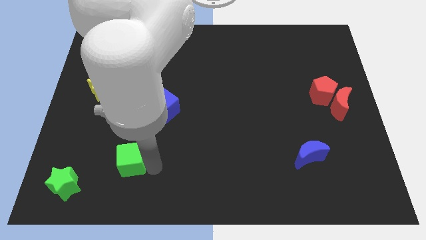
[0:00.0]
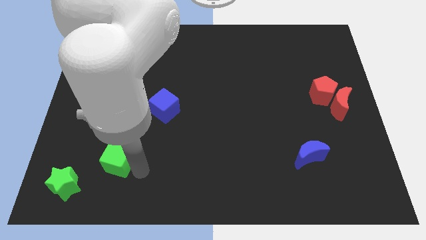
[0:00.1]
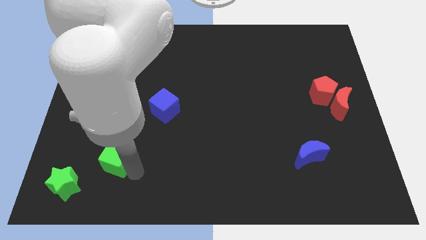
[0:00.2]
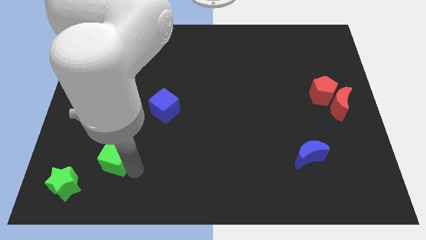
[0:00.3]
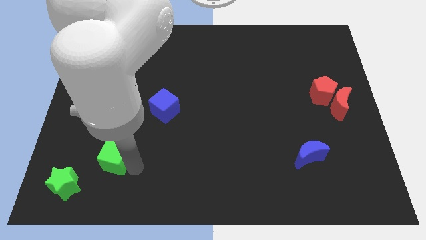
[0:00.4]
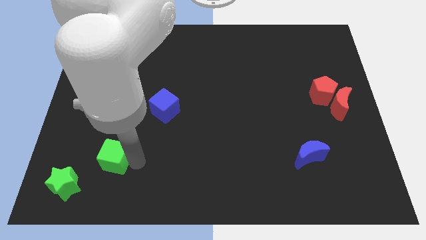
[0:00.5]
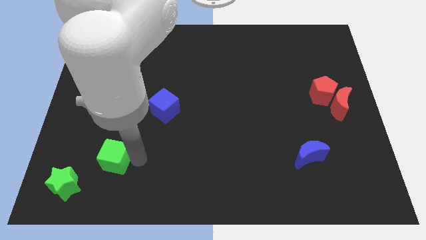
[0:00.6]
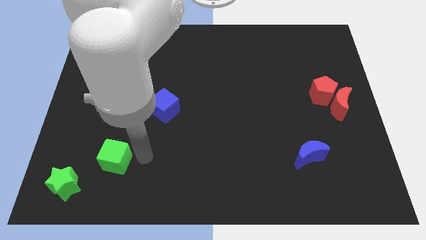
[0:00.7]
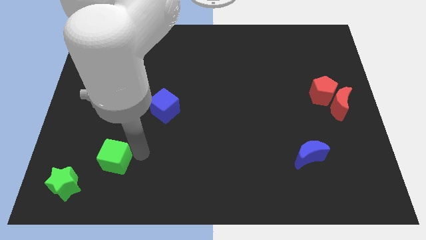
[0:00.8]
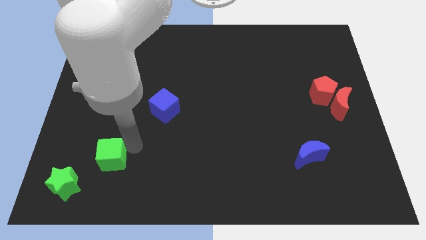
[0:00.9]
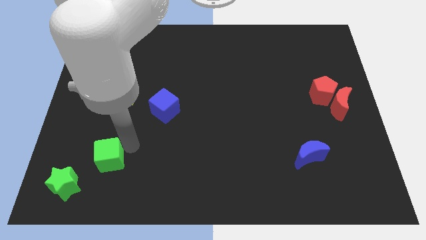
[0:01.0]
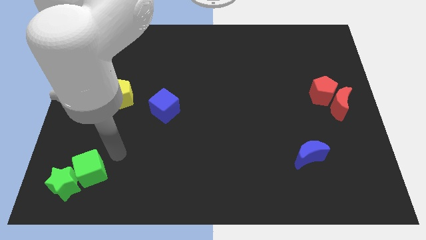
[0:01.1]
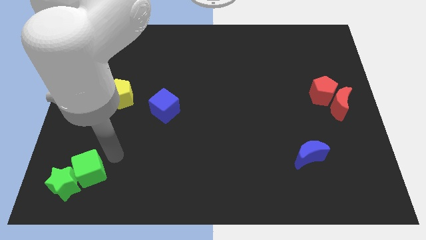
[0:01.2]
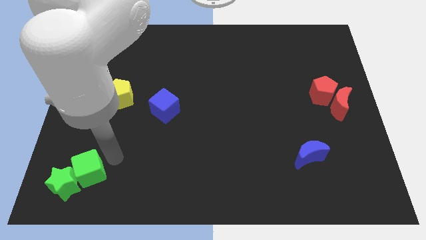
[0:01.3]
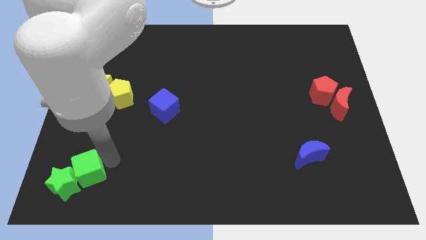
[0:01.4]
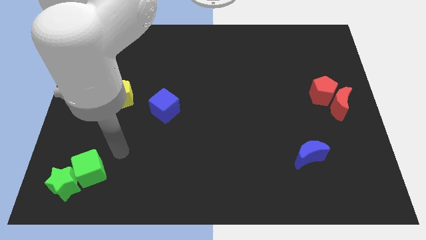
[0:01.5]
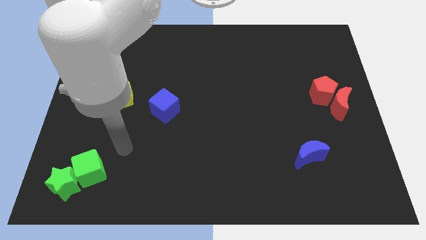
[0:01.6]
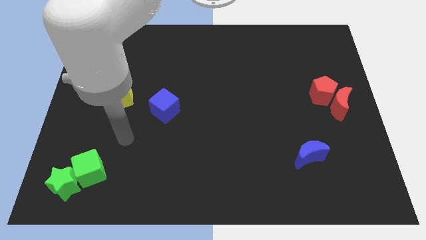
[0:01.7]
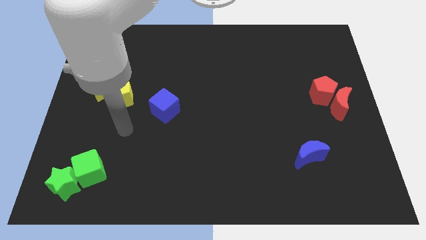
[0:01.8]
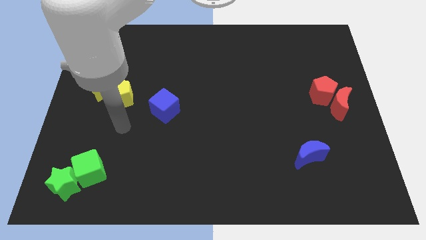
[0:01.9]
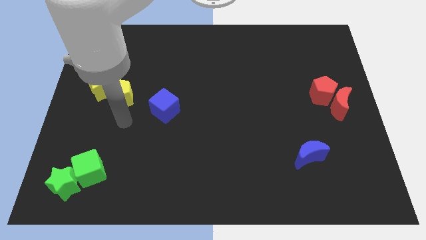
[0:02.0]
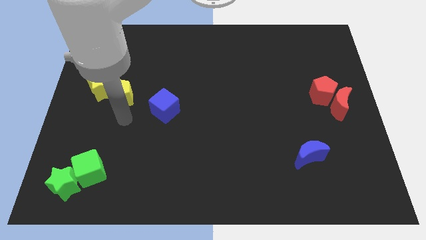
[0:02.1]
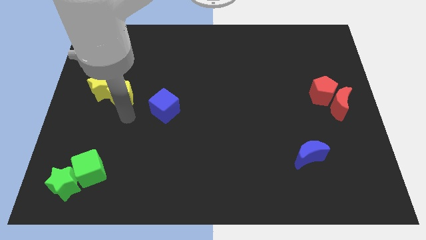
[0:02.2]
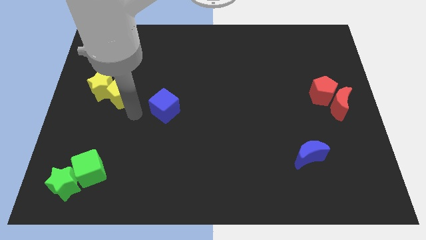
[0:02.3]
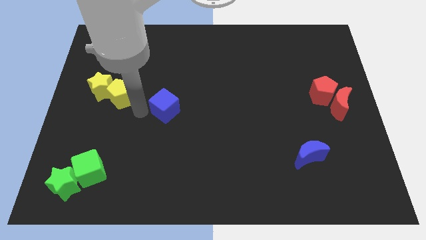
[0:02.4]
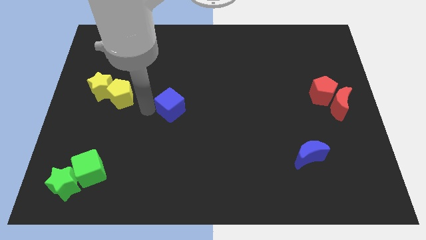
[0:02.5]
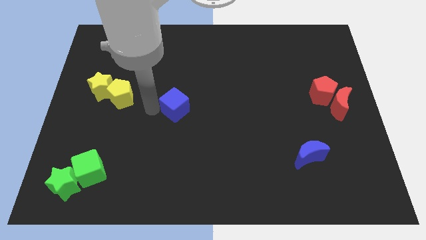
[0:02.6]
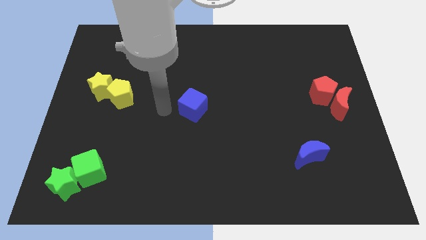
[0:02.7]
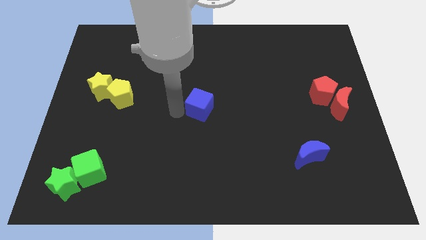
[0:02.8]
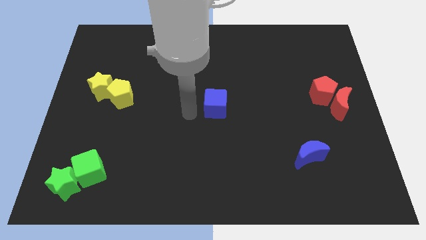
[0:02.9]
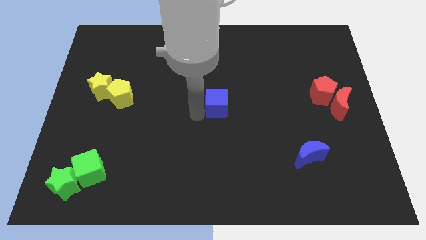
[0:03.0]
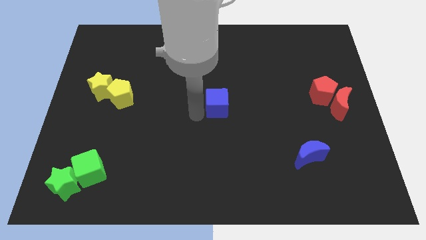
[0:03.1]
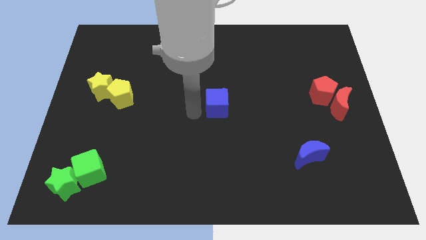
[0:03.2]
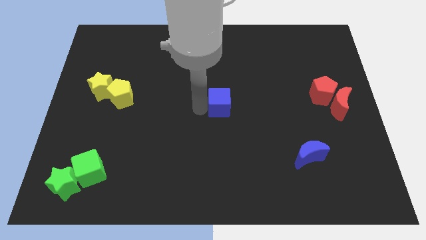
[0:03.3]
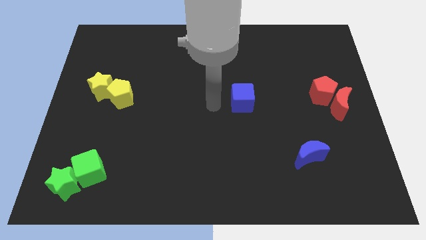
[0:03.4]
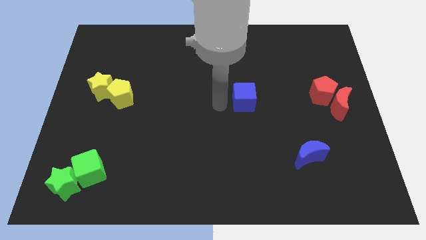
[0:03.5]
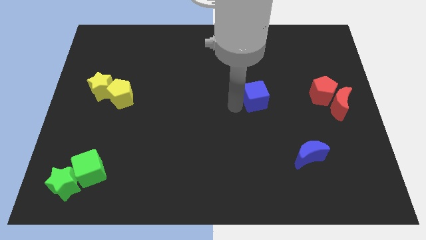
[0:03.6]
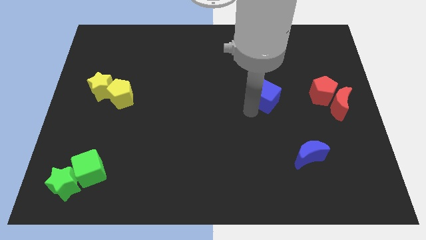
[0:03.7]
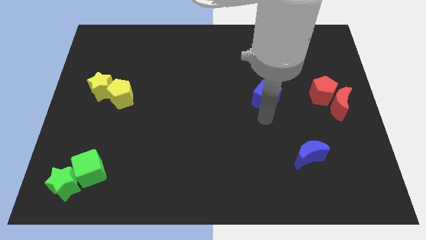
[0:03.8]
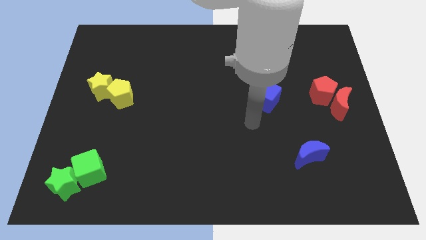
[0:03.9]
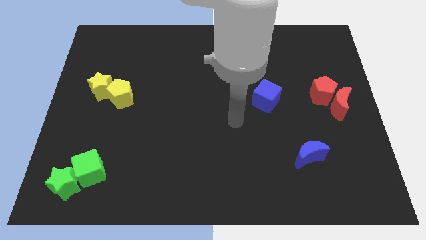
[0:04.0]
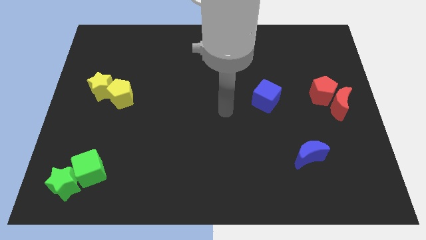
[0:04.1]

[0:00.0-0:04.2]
move the green cube to the right side of the green star

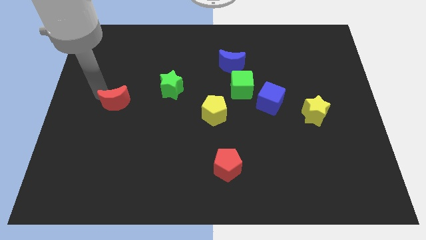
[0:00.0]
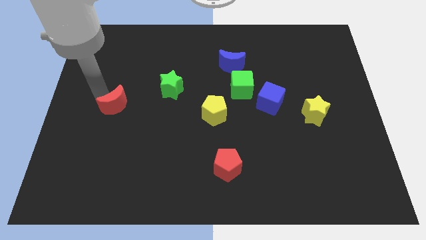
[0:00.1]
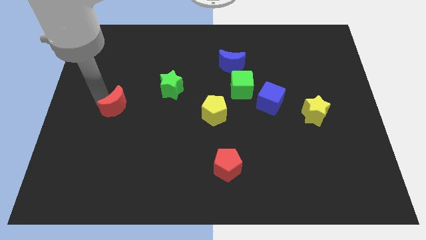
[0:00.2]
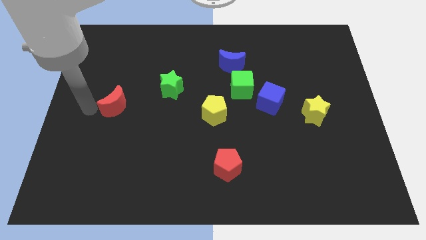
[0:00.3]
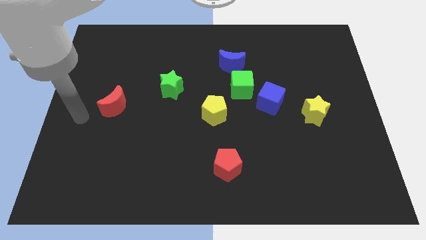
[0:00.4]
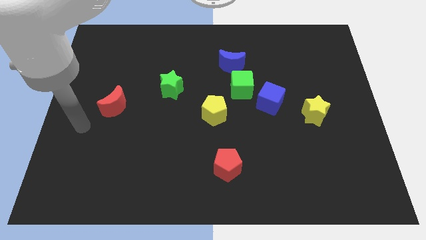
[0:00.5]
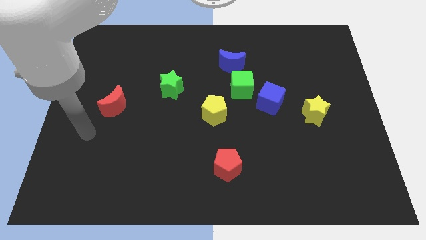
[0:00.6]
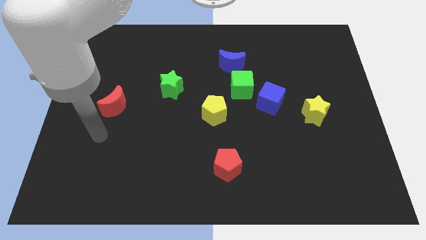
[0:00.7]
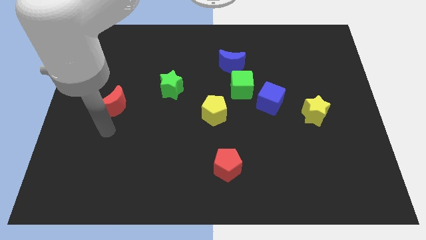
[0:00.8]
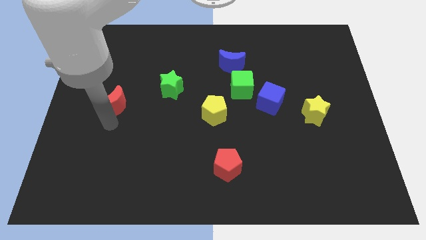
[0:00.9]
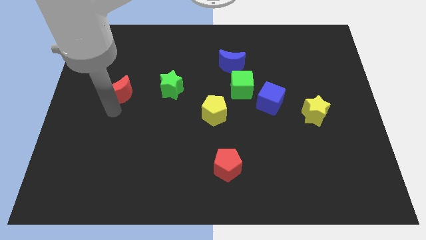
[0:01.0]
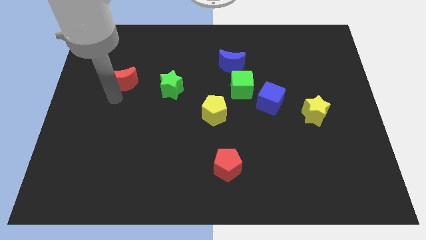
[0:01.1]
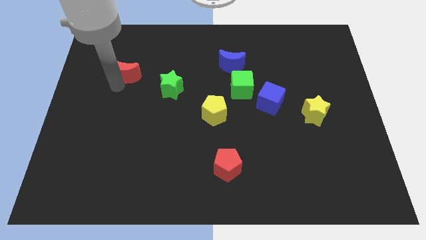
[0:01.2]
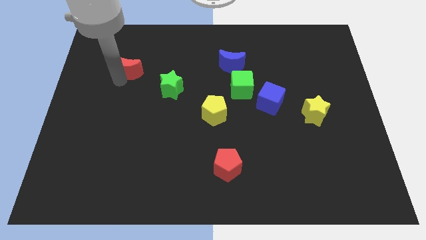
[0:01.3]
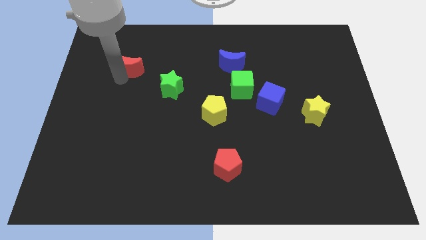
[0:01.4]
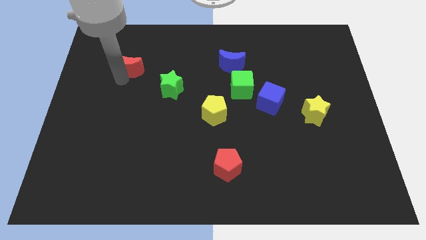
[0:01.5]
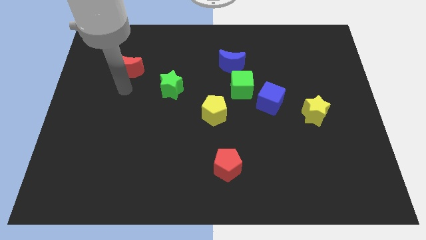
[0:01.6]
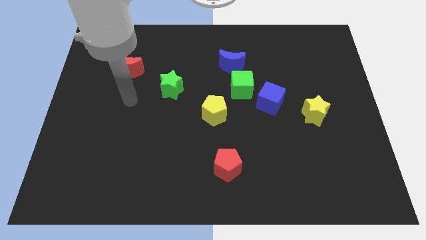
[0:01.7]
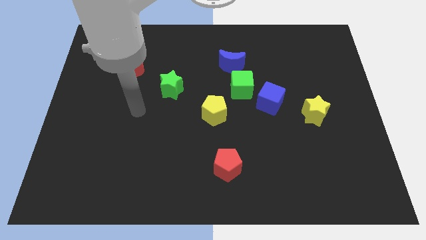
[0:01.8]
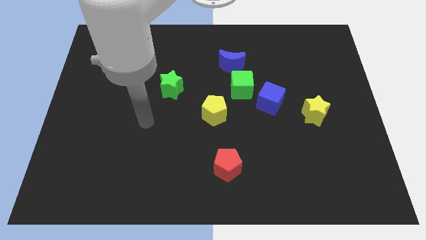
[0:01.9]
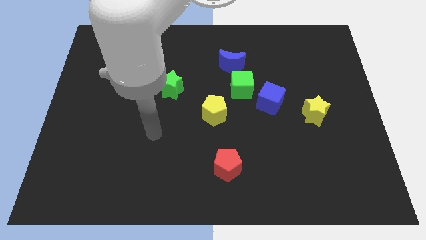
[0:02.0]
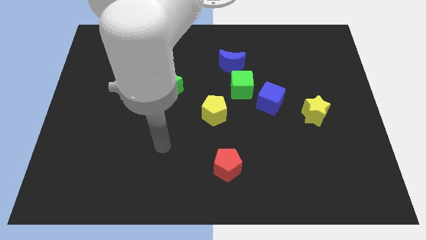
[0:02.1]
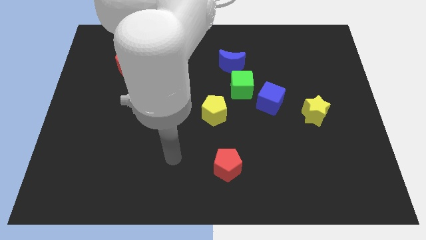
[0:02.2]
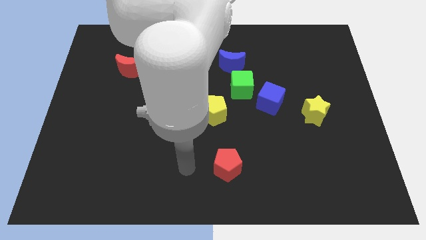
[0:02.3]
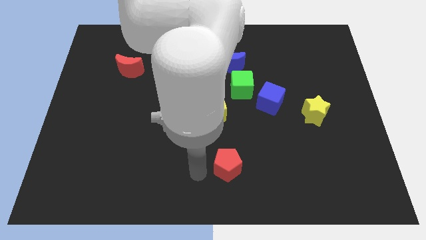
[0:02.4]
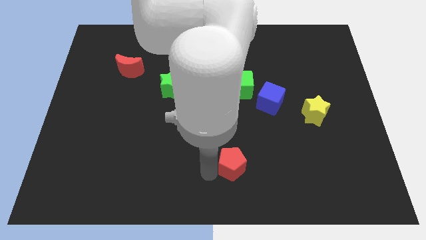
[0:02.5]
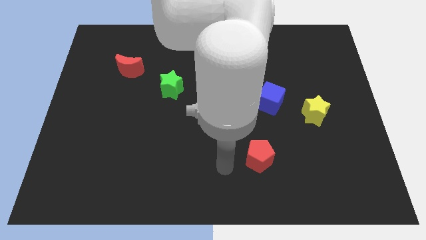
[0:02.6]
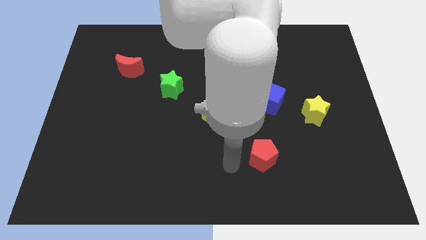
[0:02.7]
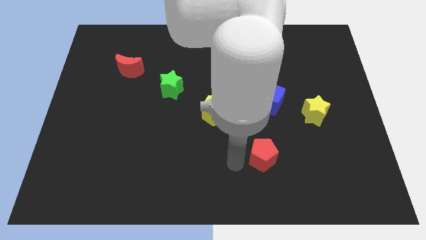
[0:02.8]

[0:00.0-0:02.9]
move the red moon slightly up

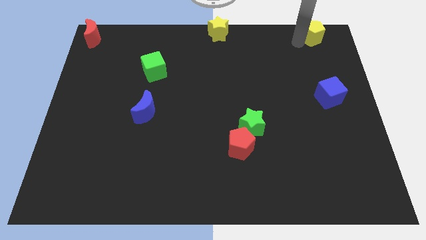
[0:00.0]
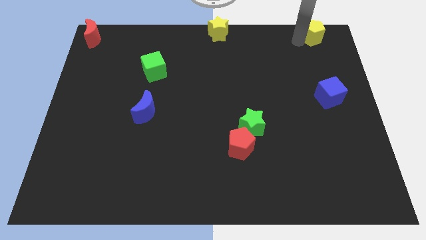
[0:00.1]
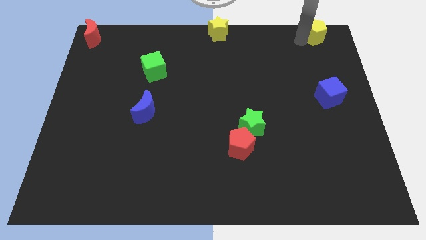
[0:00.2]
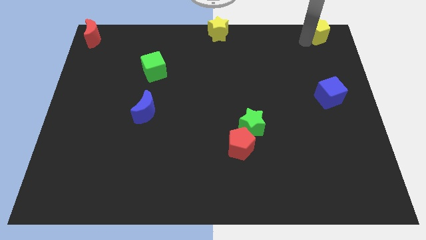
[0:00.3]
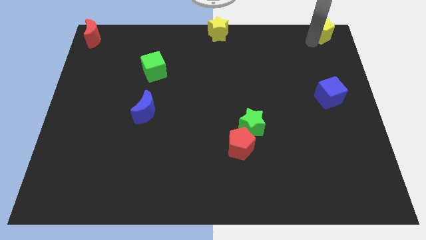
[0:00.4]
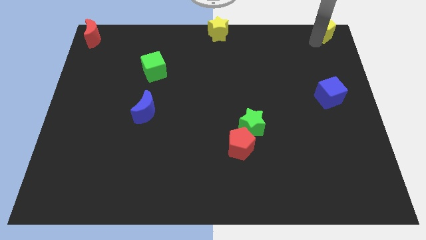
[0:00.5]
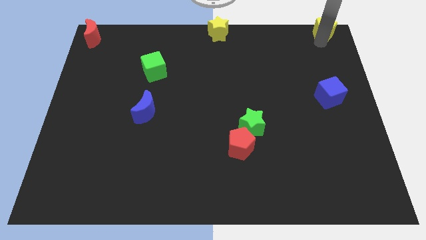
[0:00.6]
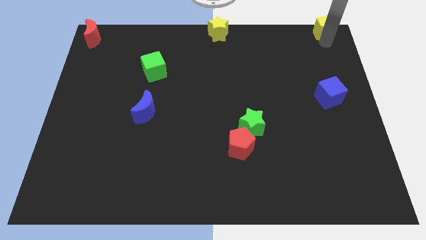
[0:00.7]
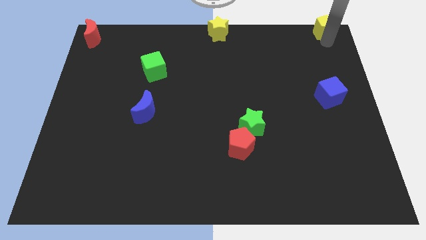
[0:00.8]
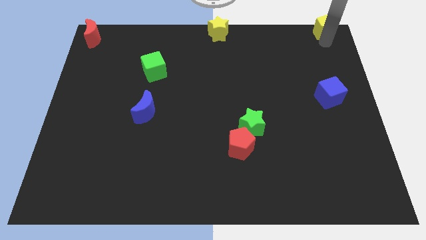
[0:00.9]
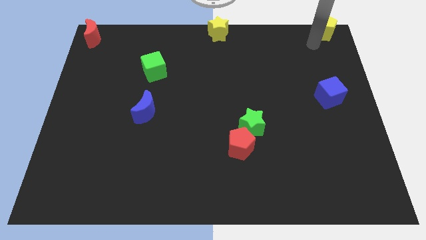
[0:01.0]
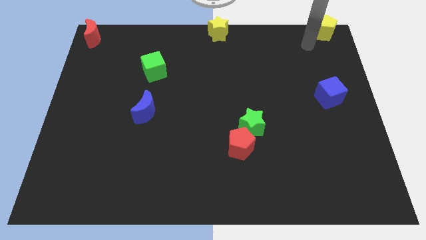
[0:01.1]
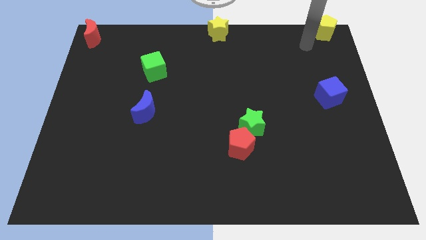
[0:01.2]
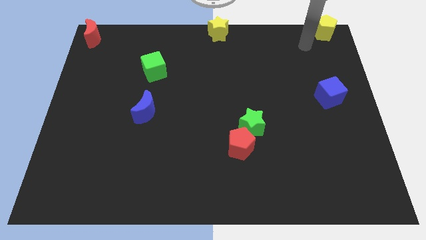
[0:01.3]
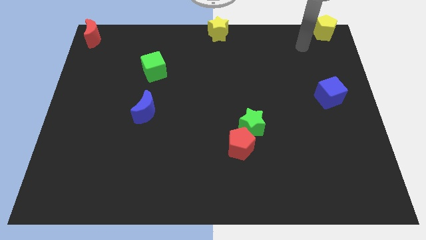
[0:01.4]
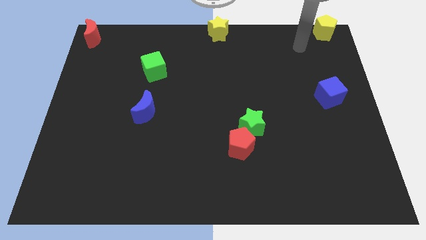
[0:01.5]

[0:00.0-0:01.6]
push yellow pentagon to the top right corner of the board

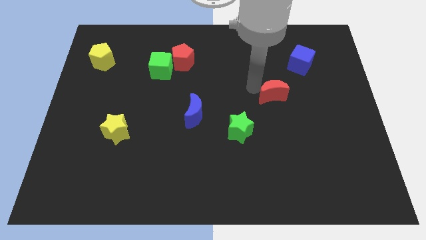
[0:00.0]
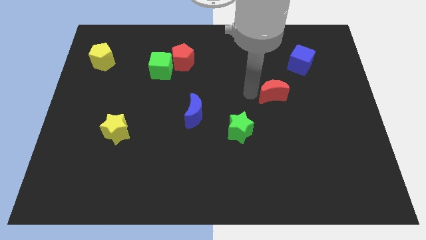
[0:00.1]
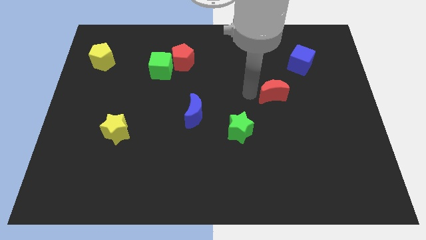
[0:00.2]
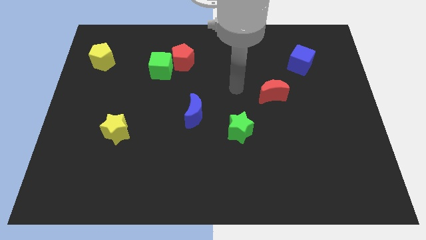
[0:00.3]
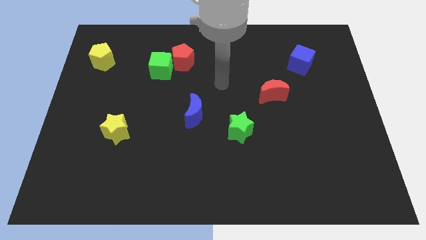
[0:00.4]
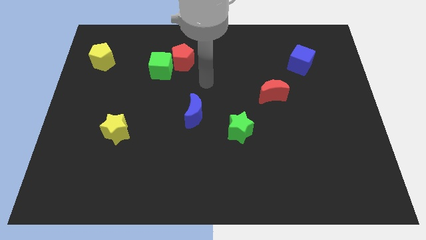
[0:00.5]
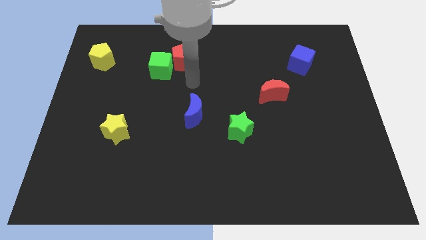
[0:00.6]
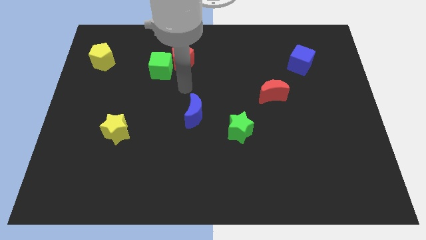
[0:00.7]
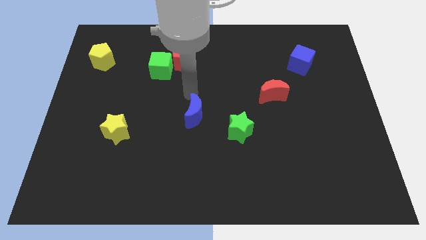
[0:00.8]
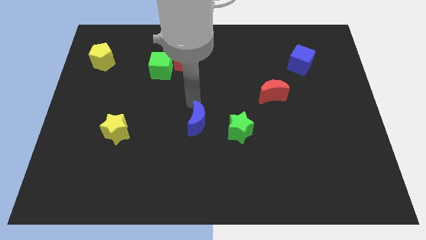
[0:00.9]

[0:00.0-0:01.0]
place your arm at the top of blue crescent
